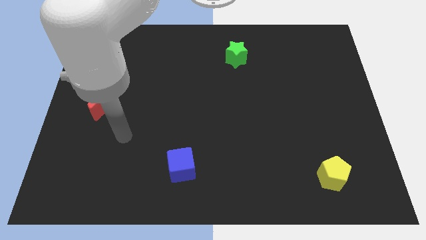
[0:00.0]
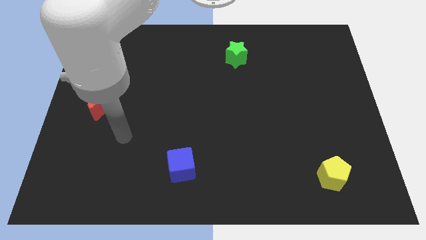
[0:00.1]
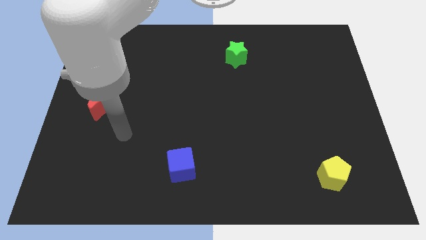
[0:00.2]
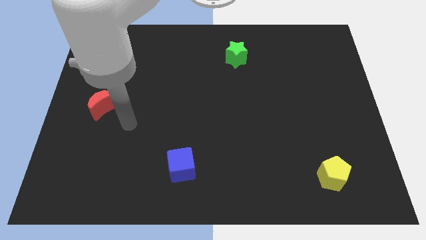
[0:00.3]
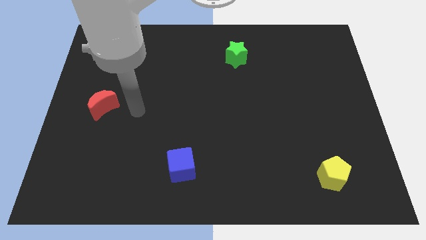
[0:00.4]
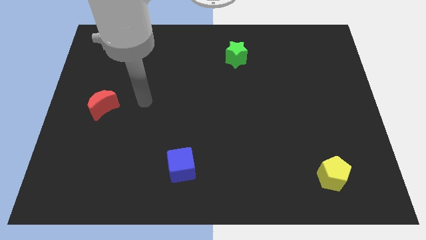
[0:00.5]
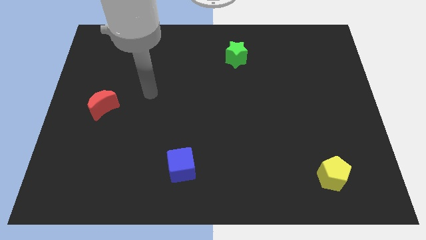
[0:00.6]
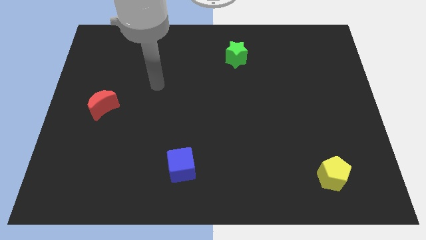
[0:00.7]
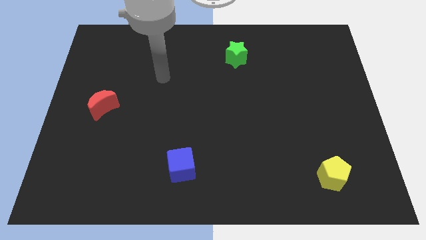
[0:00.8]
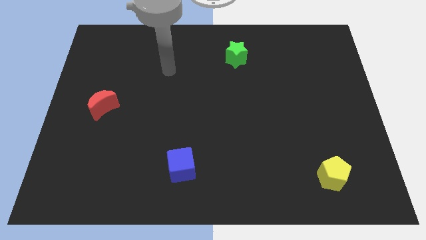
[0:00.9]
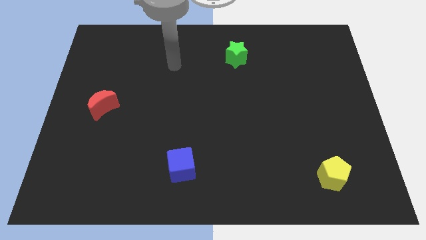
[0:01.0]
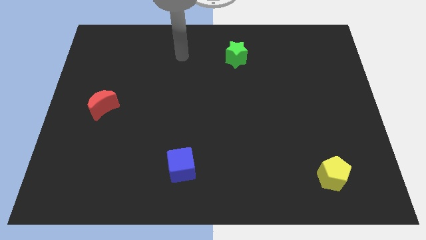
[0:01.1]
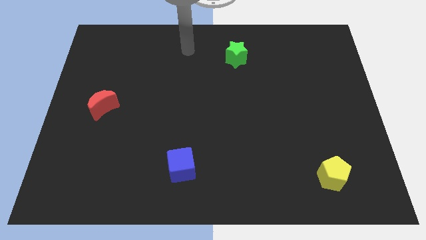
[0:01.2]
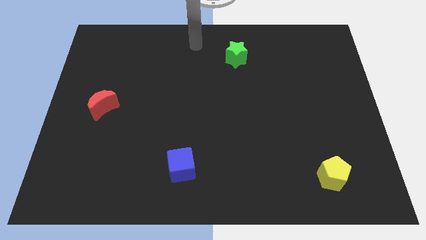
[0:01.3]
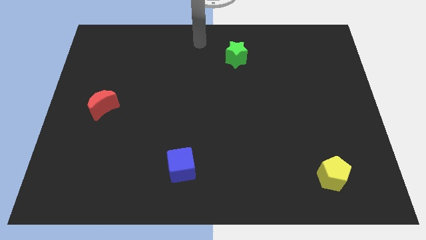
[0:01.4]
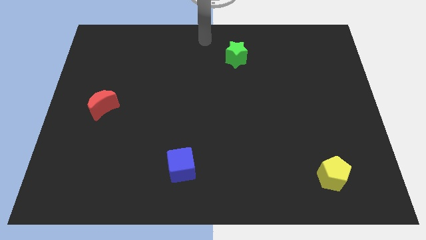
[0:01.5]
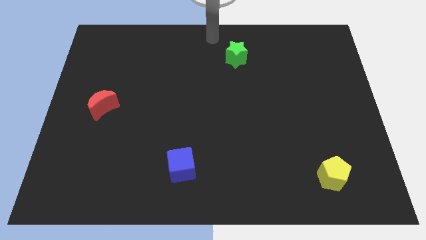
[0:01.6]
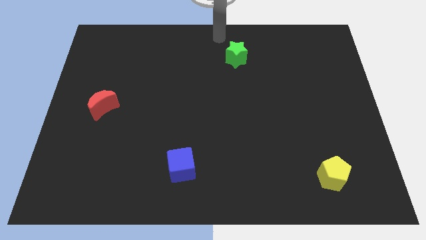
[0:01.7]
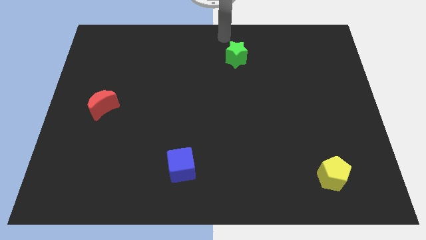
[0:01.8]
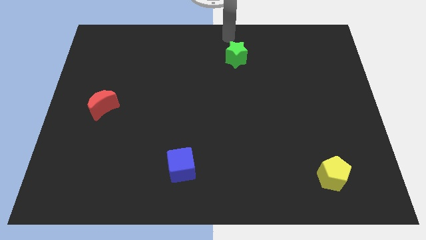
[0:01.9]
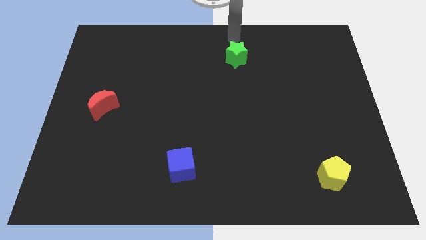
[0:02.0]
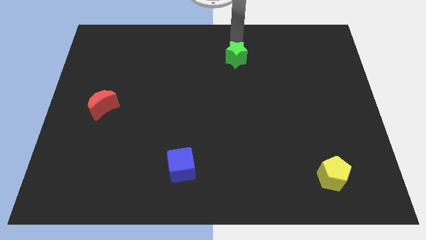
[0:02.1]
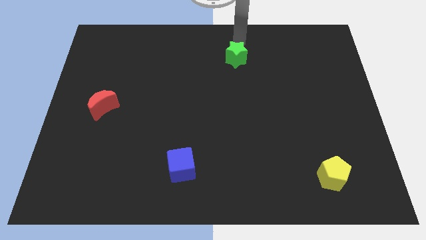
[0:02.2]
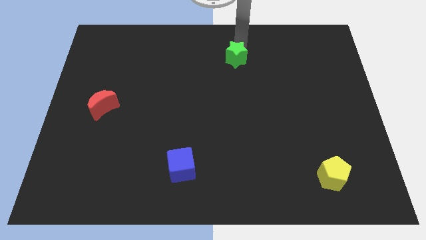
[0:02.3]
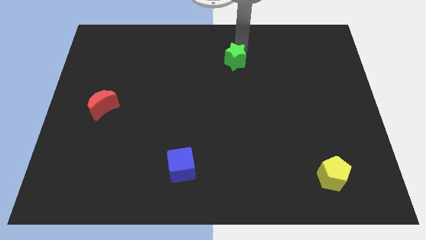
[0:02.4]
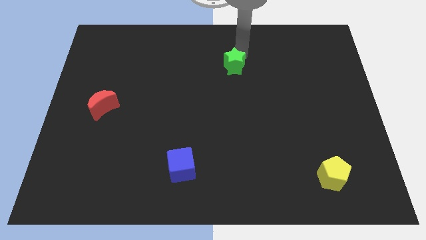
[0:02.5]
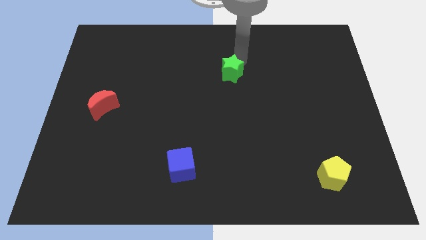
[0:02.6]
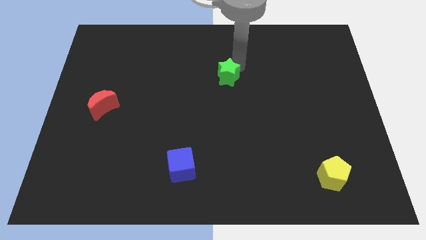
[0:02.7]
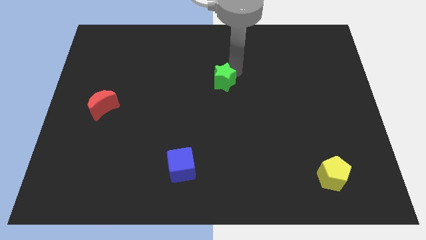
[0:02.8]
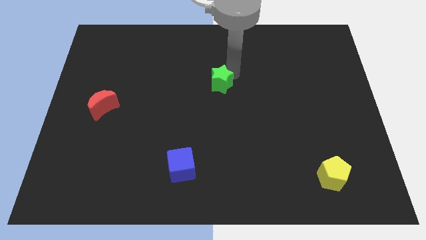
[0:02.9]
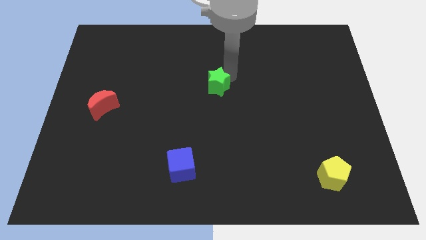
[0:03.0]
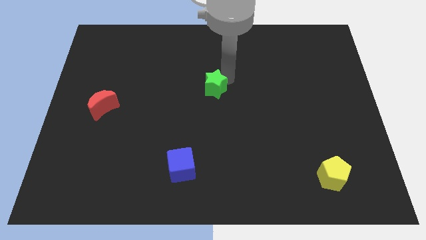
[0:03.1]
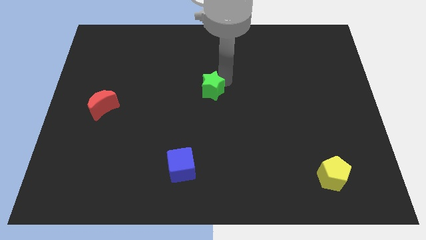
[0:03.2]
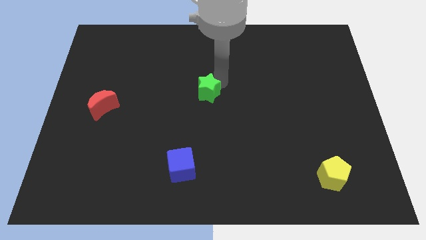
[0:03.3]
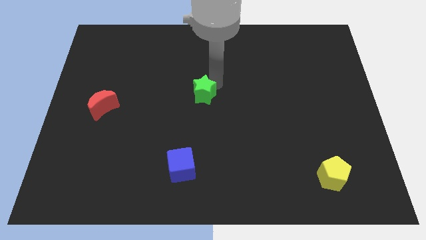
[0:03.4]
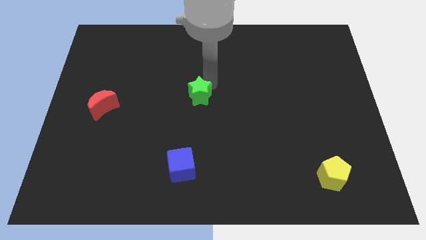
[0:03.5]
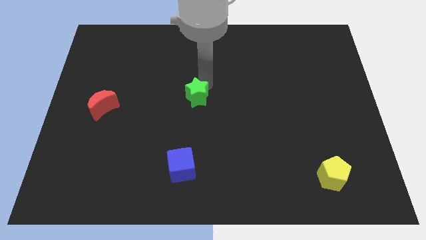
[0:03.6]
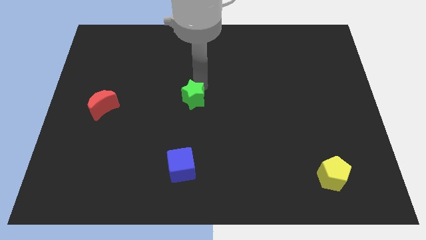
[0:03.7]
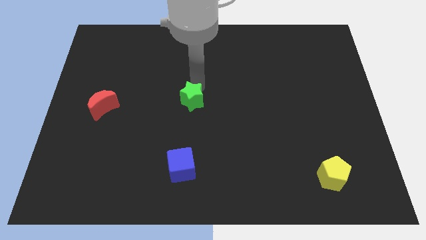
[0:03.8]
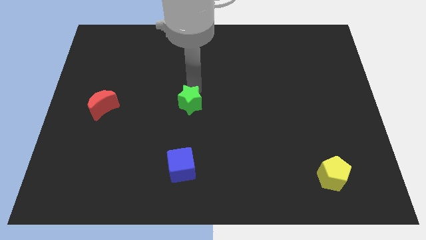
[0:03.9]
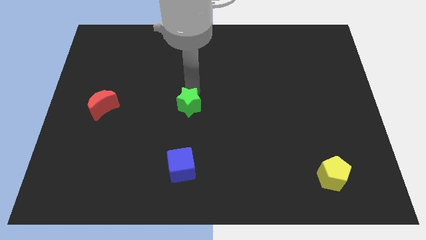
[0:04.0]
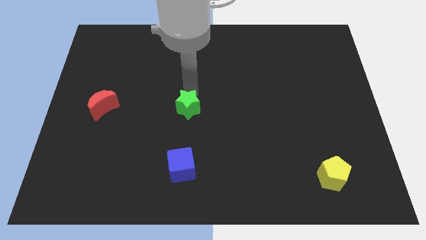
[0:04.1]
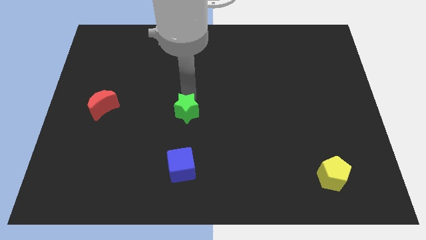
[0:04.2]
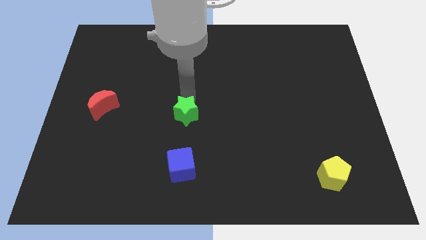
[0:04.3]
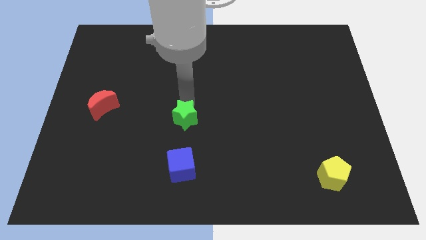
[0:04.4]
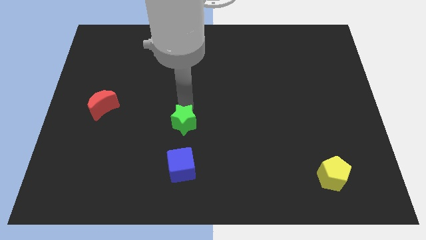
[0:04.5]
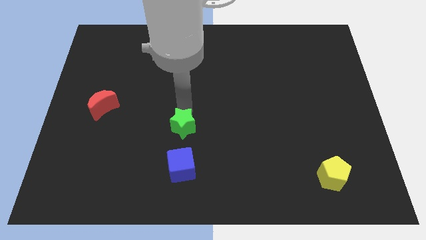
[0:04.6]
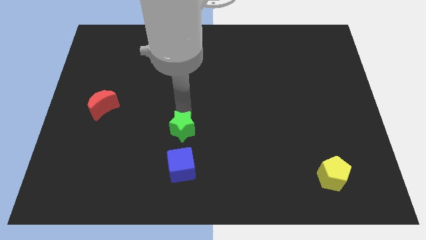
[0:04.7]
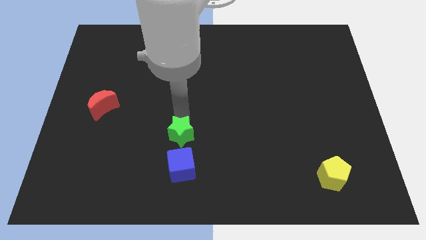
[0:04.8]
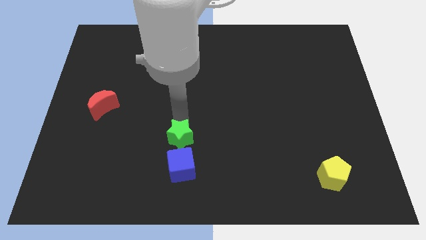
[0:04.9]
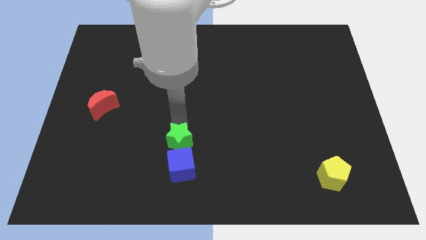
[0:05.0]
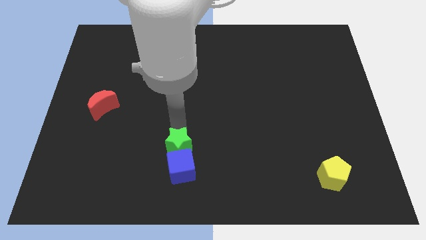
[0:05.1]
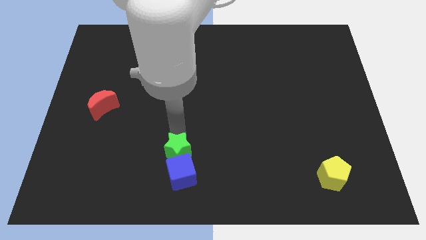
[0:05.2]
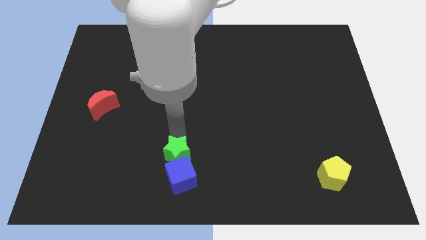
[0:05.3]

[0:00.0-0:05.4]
put the star next to the blue cube

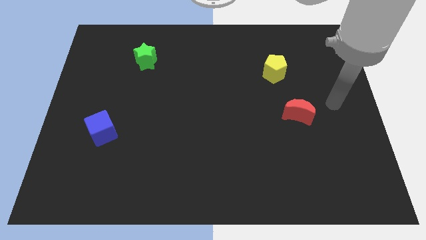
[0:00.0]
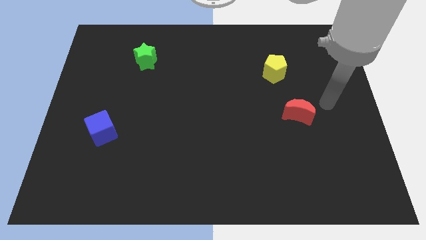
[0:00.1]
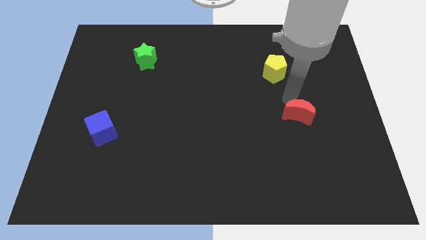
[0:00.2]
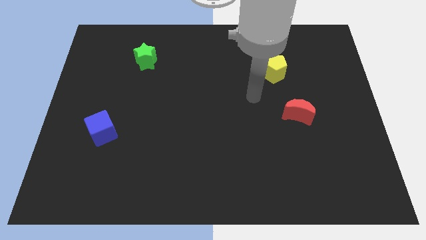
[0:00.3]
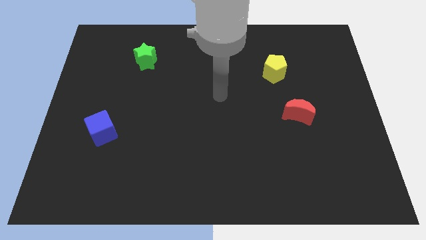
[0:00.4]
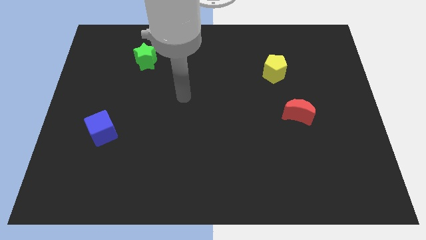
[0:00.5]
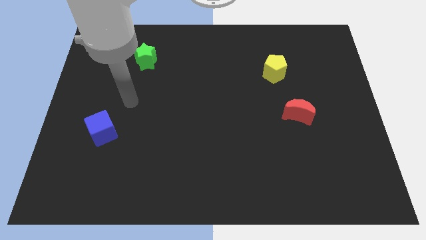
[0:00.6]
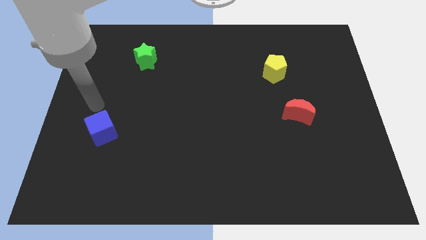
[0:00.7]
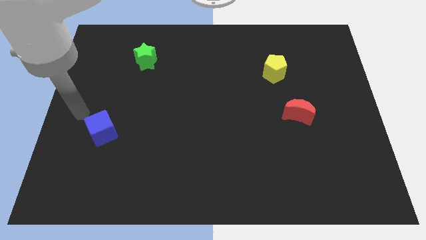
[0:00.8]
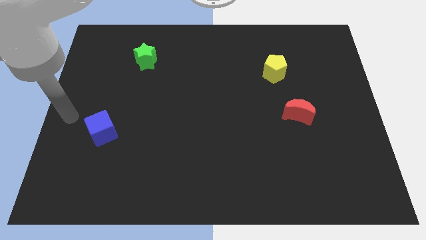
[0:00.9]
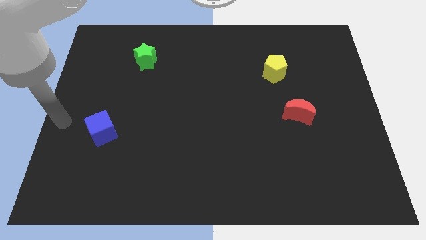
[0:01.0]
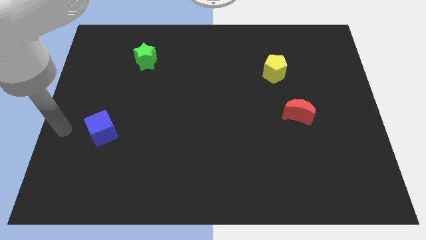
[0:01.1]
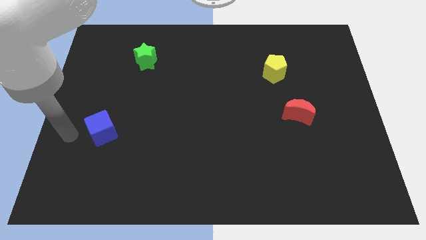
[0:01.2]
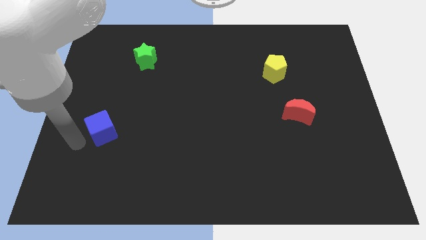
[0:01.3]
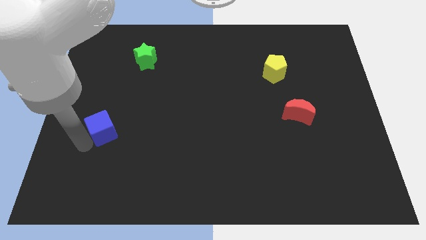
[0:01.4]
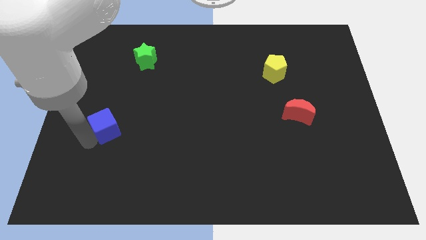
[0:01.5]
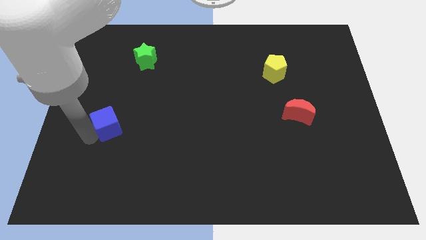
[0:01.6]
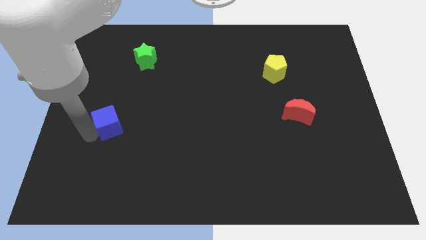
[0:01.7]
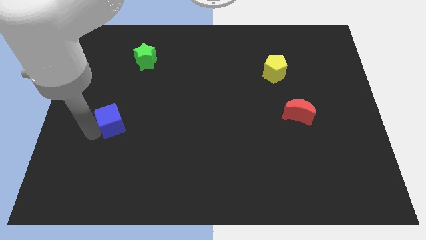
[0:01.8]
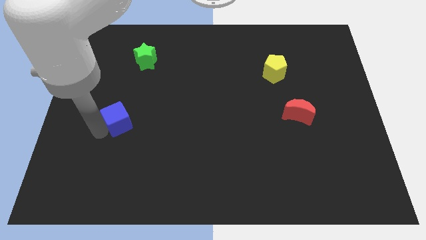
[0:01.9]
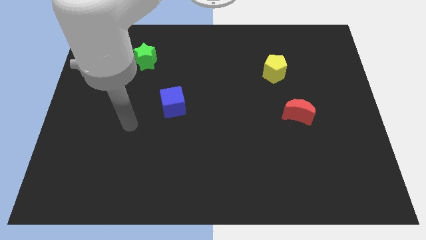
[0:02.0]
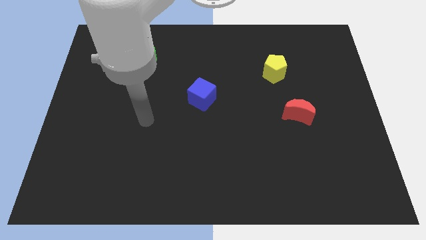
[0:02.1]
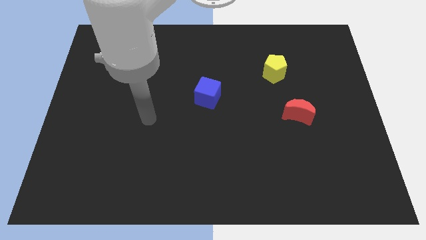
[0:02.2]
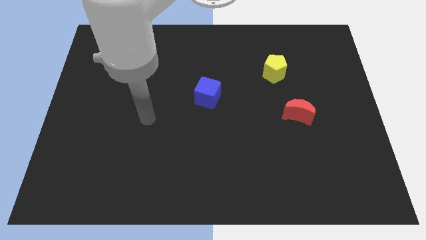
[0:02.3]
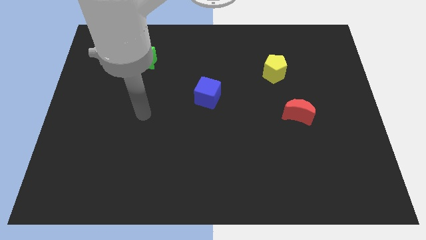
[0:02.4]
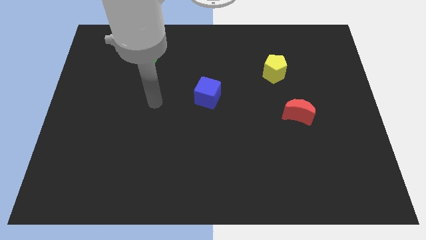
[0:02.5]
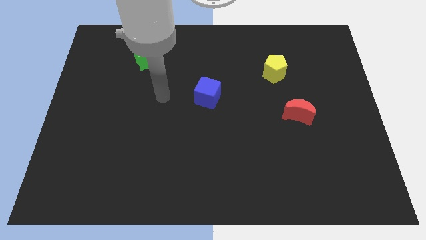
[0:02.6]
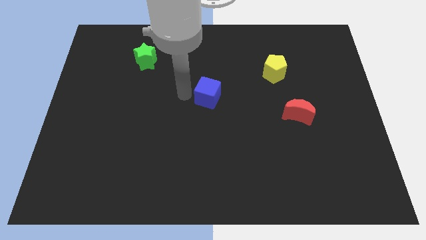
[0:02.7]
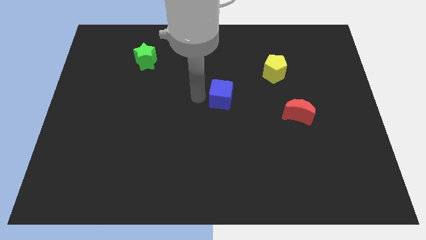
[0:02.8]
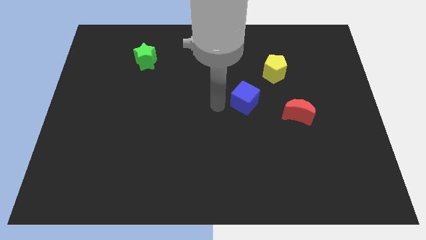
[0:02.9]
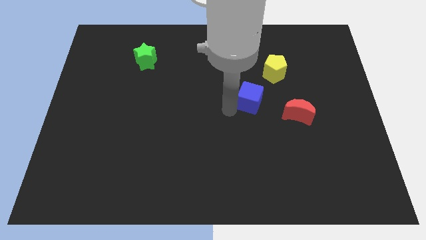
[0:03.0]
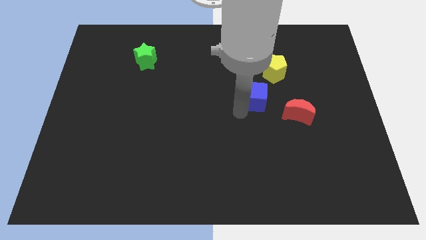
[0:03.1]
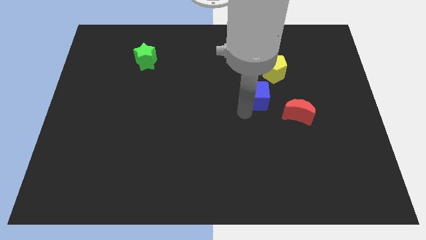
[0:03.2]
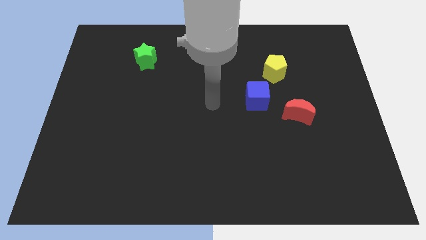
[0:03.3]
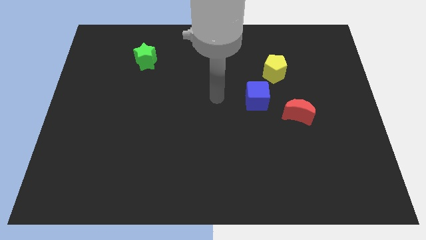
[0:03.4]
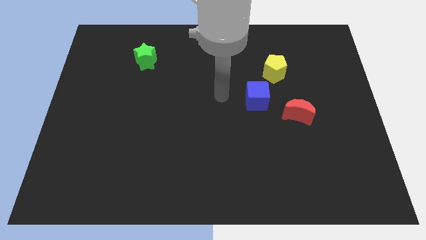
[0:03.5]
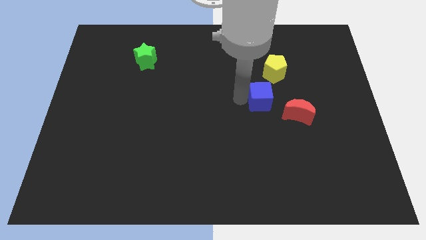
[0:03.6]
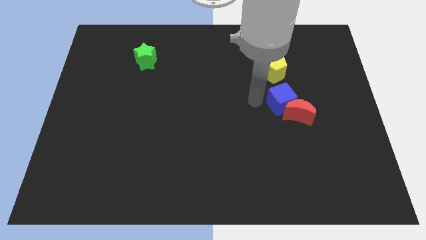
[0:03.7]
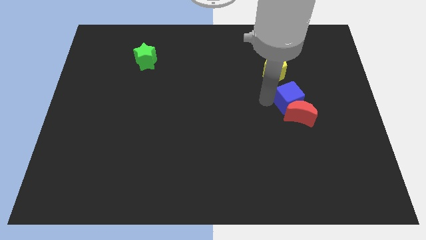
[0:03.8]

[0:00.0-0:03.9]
push the blue block to the red moon
